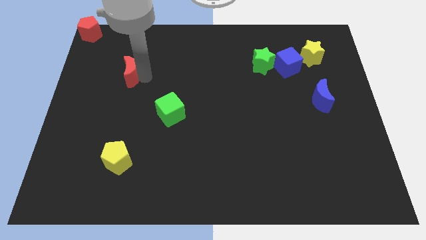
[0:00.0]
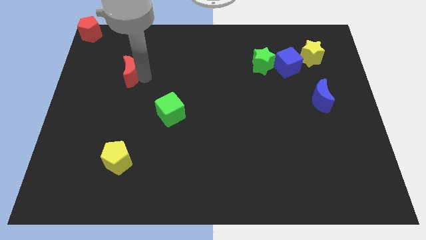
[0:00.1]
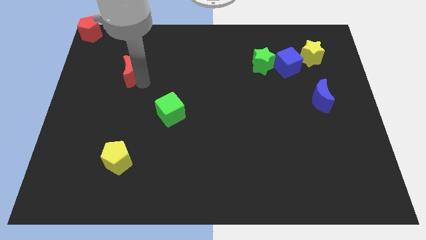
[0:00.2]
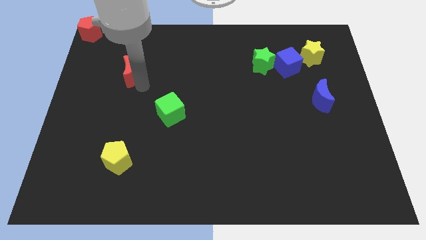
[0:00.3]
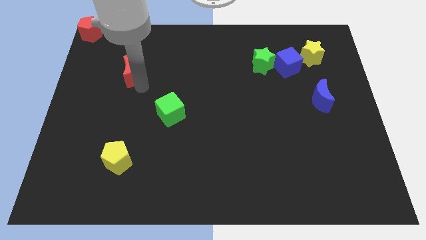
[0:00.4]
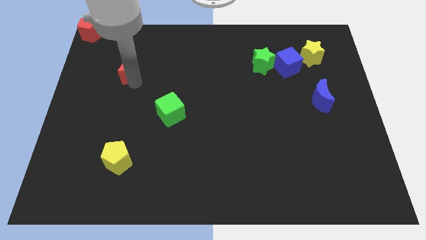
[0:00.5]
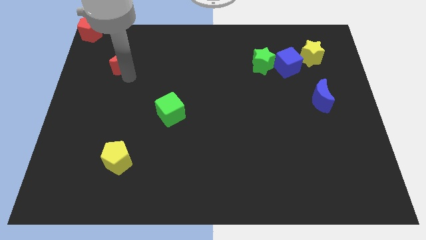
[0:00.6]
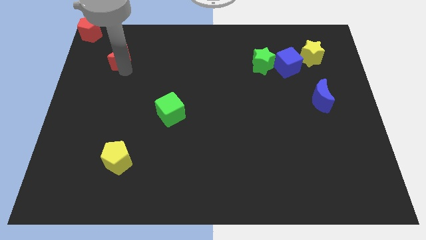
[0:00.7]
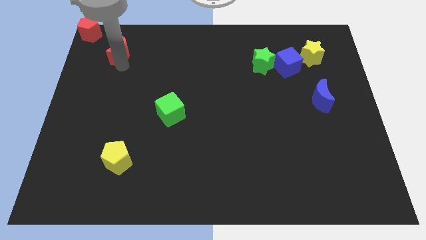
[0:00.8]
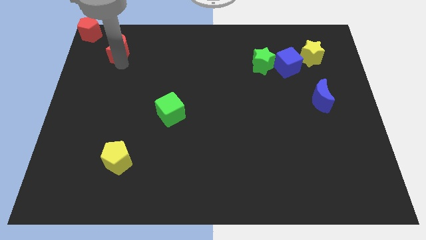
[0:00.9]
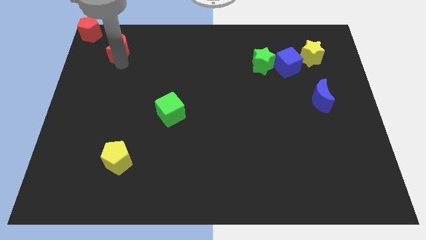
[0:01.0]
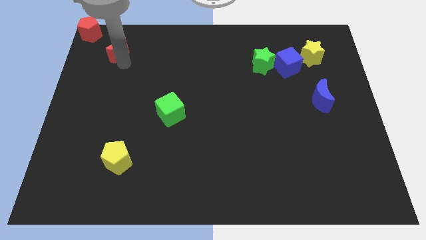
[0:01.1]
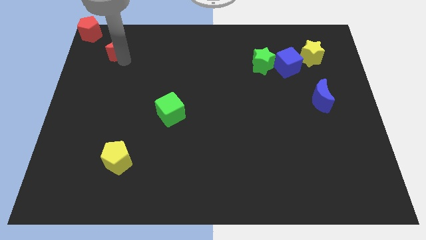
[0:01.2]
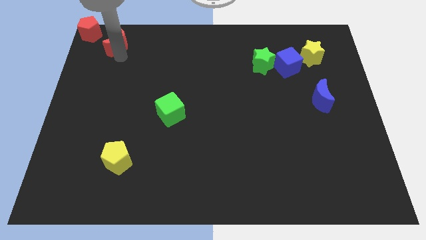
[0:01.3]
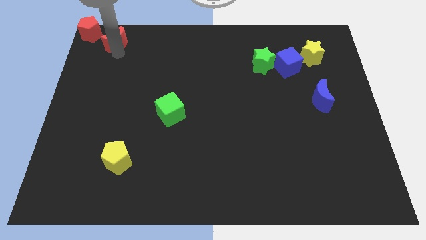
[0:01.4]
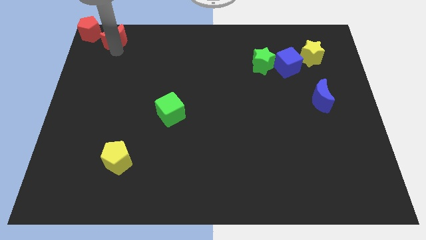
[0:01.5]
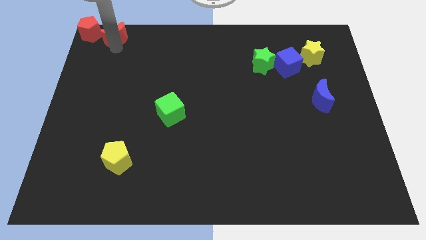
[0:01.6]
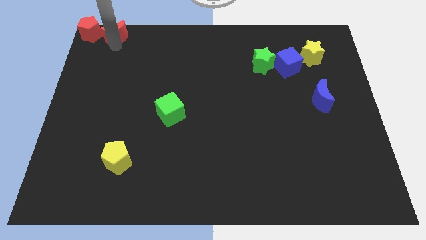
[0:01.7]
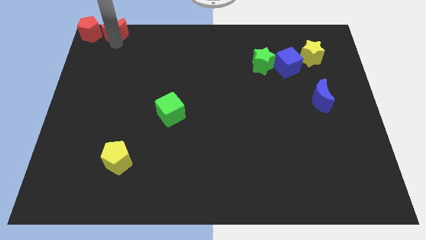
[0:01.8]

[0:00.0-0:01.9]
place the red crescent to right red pentagon

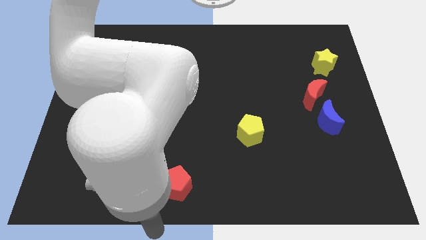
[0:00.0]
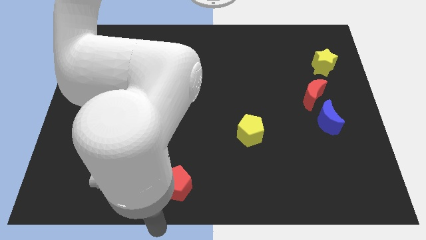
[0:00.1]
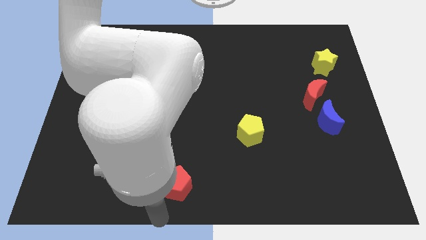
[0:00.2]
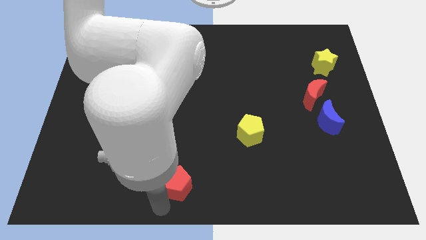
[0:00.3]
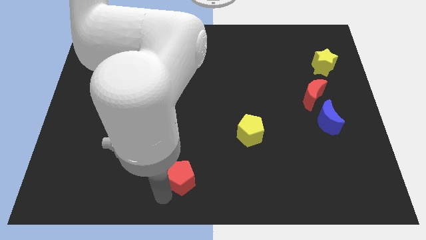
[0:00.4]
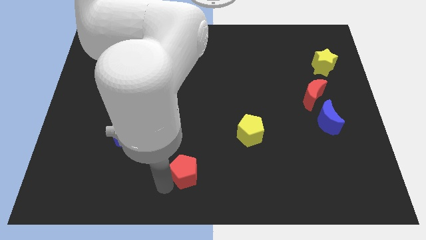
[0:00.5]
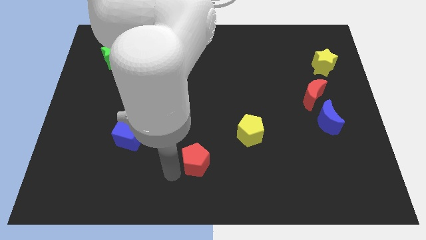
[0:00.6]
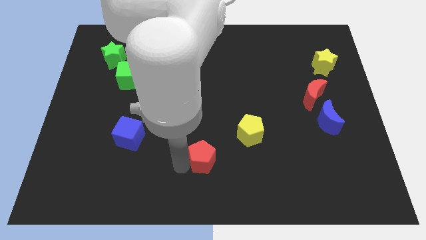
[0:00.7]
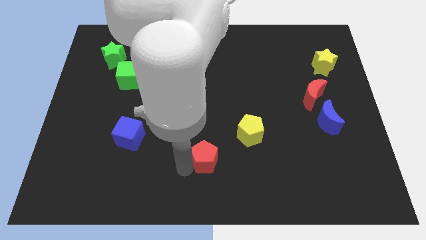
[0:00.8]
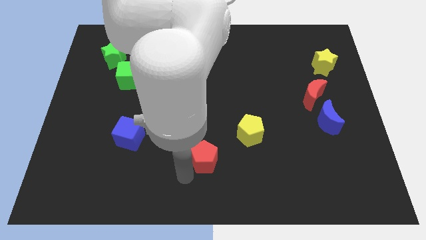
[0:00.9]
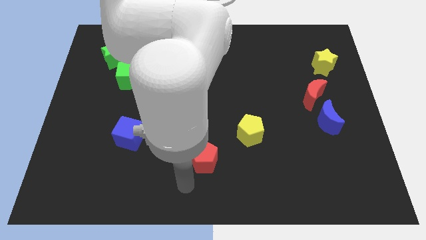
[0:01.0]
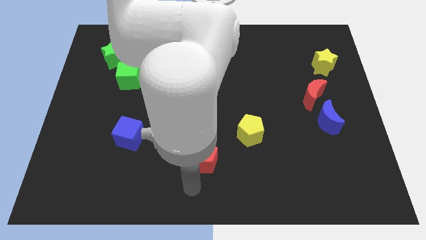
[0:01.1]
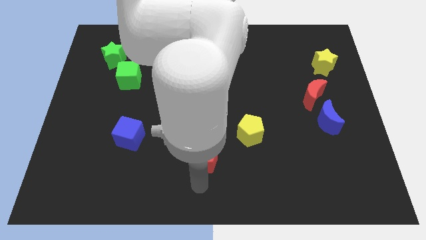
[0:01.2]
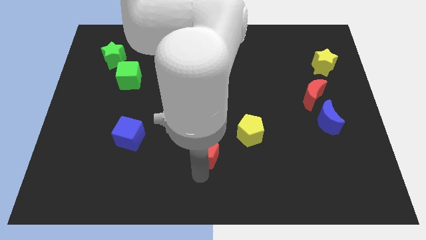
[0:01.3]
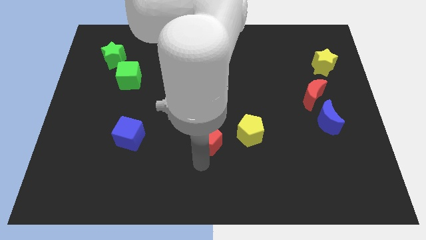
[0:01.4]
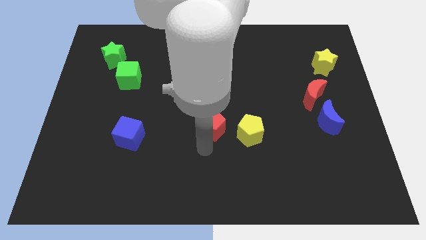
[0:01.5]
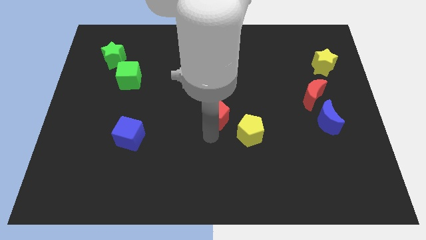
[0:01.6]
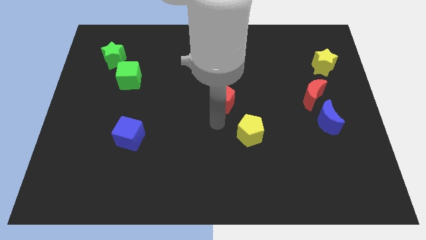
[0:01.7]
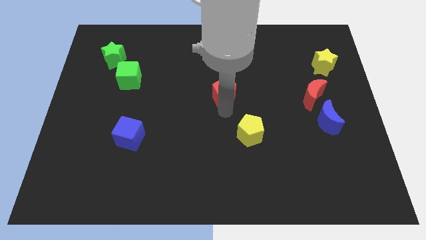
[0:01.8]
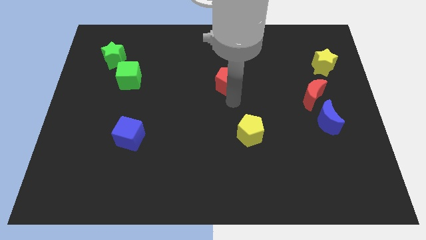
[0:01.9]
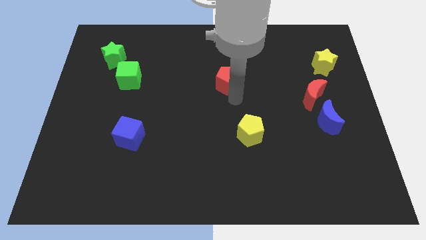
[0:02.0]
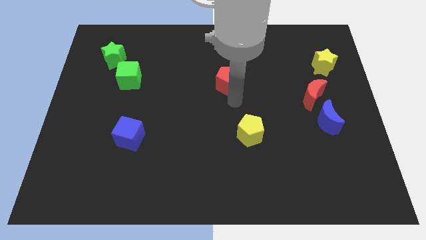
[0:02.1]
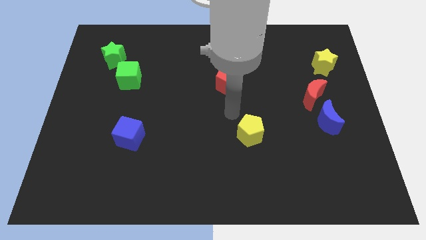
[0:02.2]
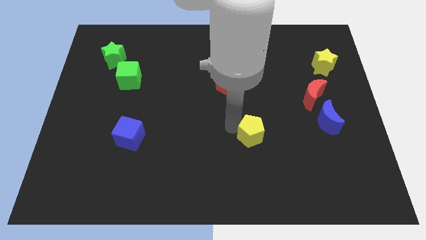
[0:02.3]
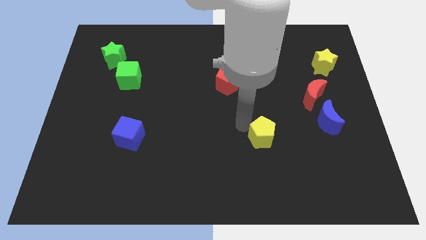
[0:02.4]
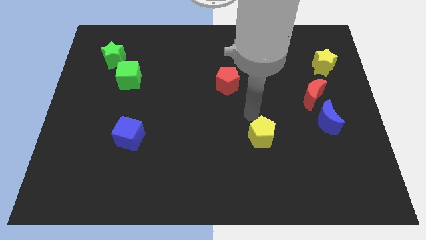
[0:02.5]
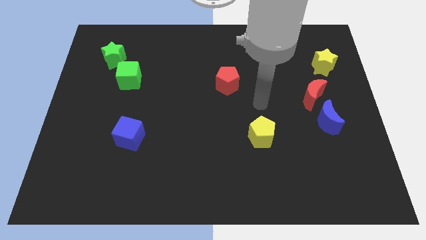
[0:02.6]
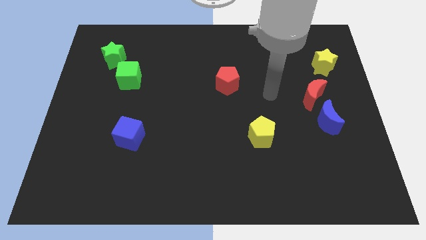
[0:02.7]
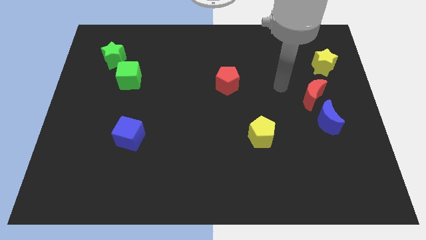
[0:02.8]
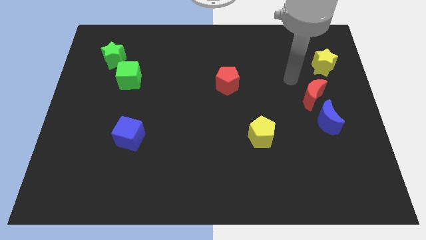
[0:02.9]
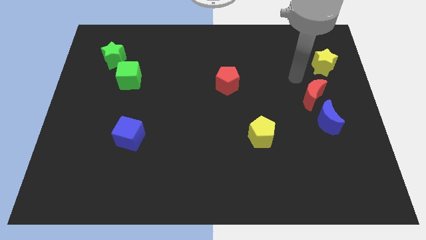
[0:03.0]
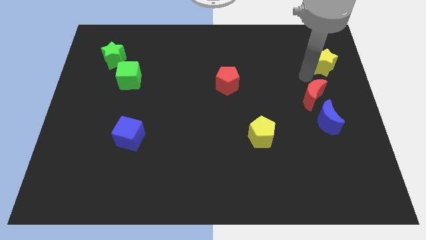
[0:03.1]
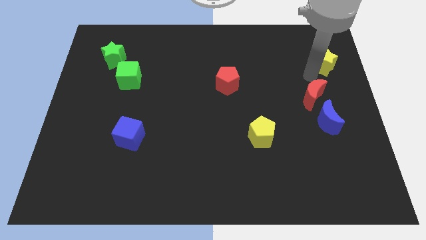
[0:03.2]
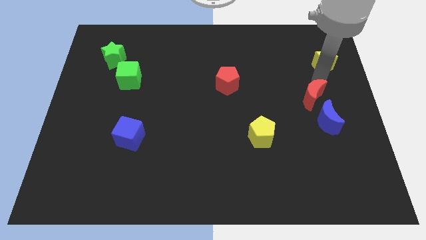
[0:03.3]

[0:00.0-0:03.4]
push the red pentagon diagonally top left to the yellow pentagon

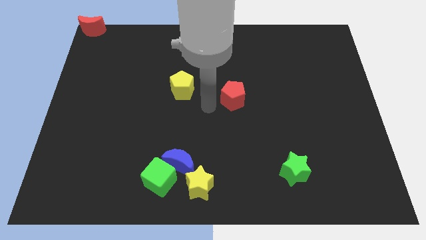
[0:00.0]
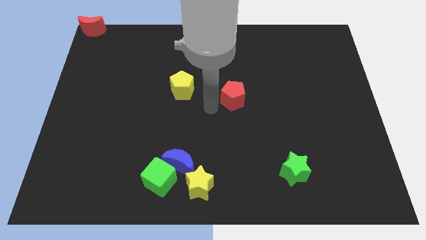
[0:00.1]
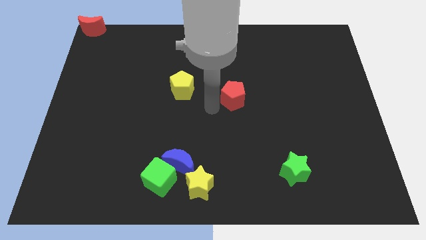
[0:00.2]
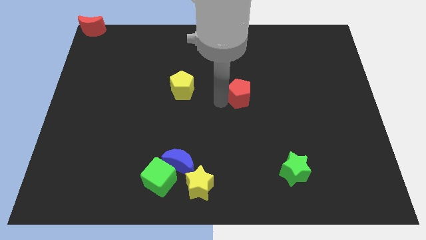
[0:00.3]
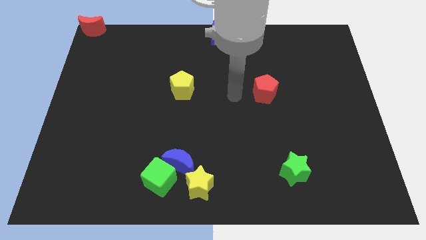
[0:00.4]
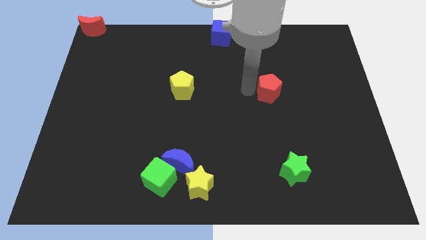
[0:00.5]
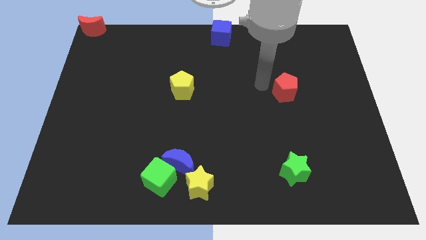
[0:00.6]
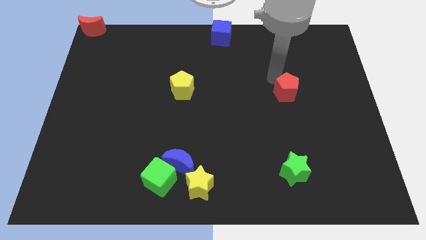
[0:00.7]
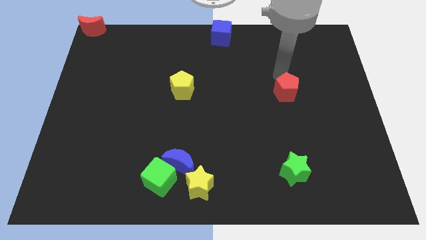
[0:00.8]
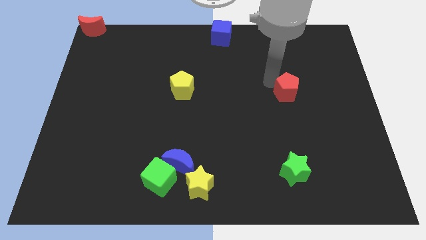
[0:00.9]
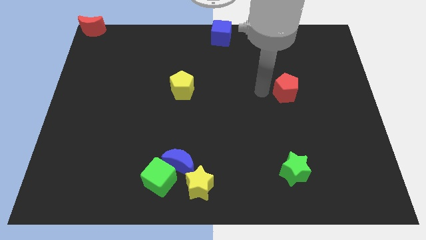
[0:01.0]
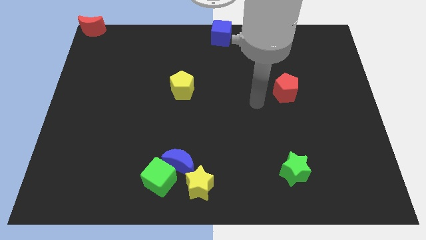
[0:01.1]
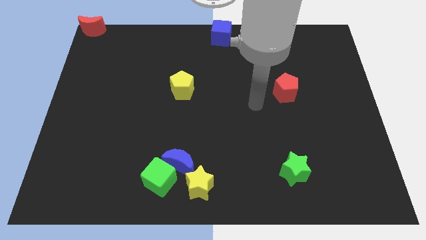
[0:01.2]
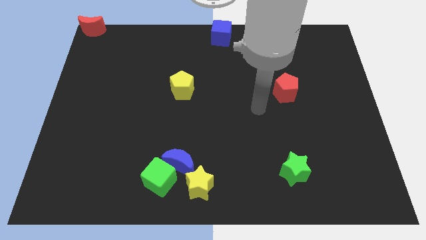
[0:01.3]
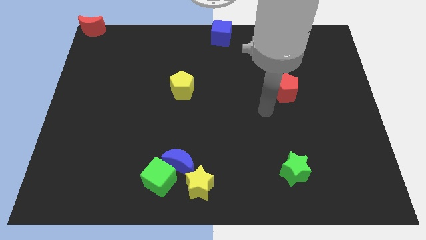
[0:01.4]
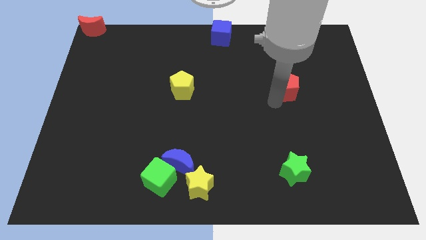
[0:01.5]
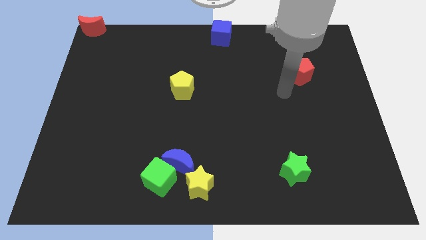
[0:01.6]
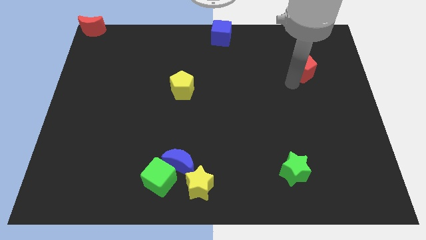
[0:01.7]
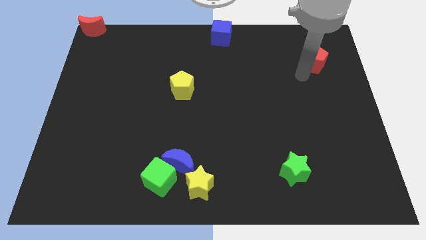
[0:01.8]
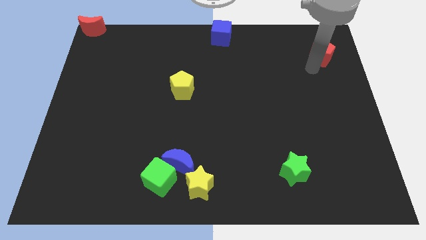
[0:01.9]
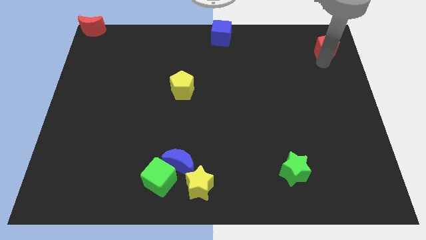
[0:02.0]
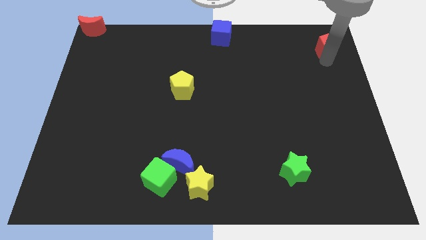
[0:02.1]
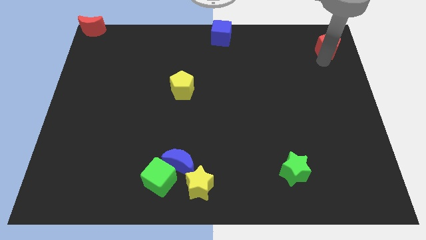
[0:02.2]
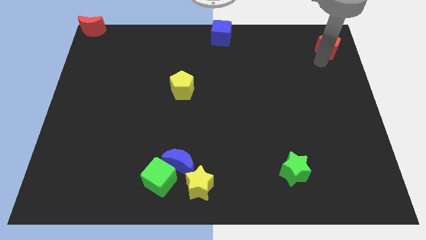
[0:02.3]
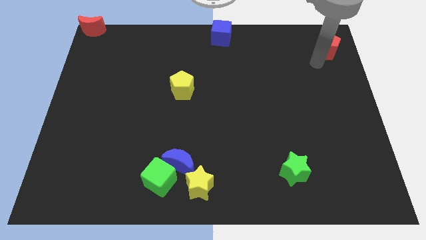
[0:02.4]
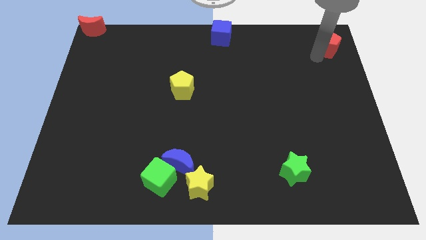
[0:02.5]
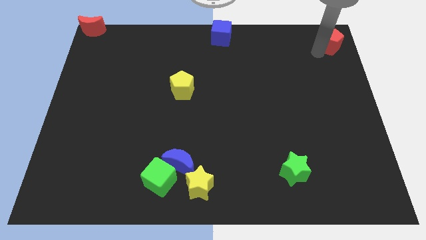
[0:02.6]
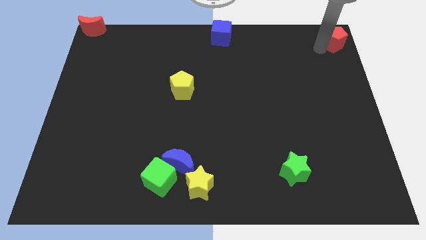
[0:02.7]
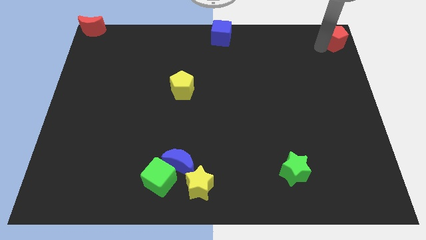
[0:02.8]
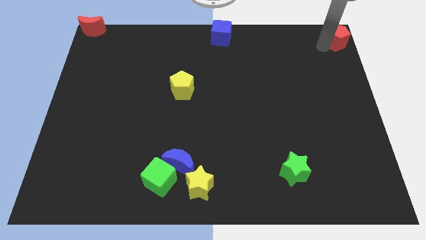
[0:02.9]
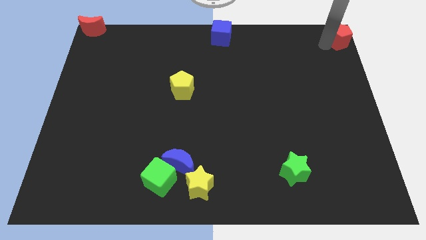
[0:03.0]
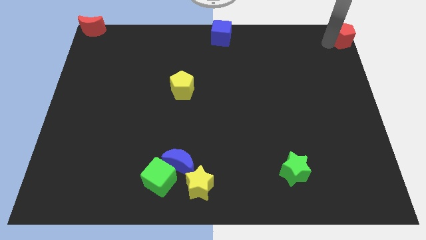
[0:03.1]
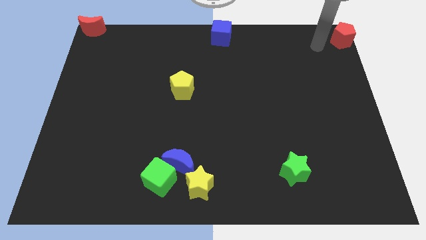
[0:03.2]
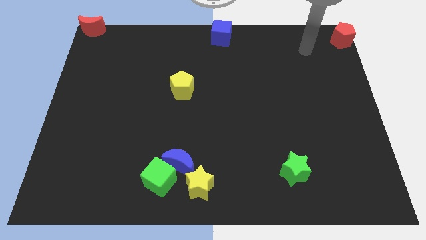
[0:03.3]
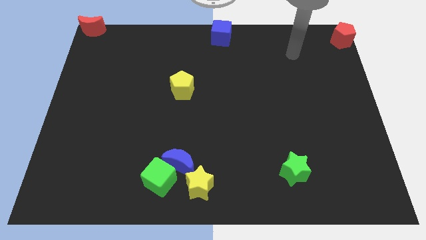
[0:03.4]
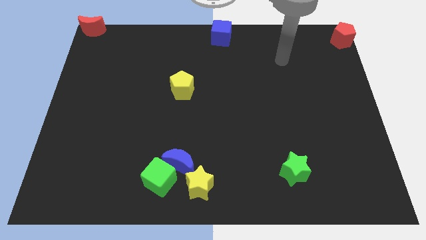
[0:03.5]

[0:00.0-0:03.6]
push the red pentagon to the top right corner

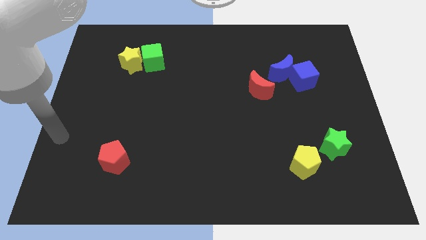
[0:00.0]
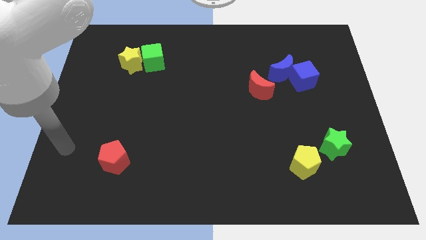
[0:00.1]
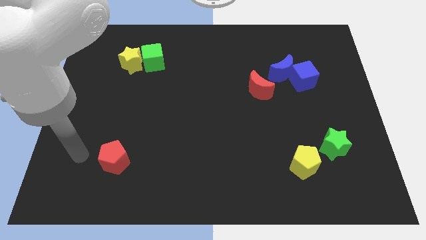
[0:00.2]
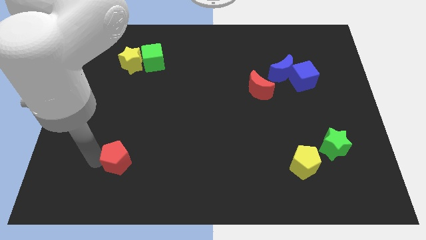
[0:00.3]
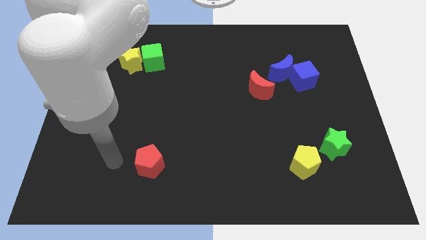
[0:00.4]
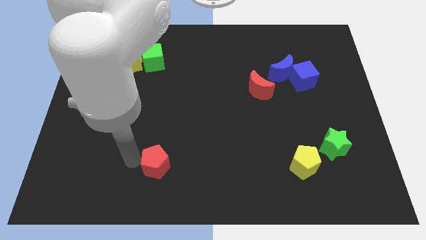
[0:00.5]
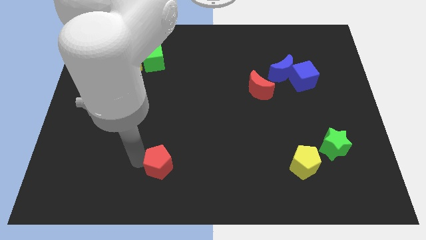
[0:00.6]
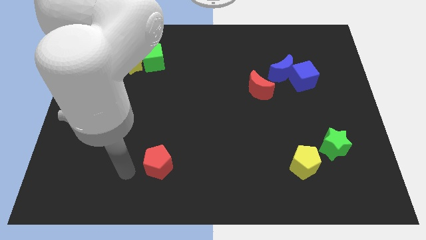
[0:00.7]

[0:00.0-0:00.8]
push the red pentagon to the right slightly
